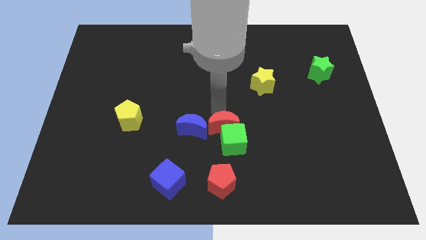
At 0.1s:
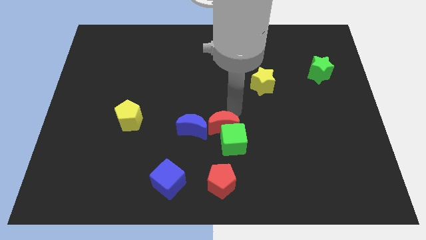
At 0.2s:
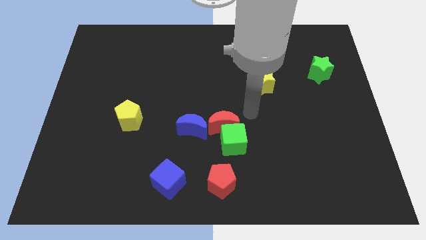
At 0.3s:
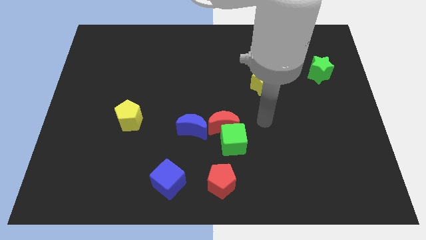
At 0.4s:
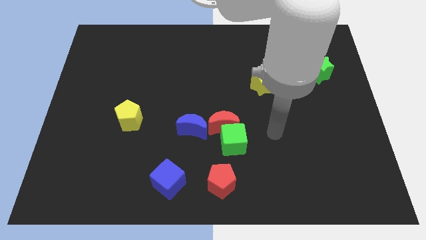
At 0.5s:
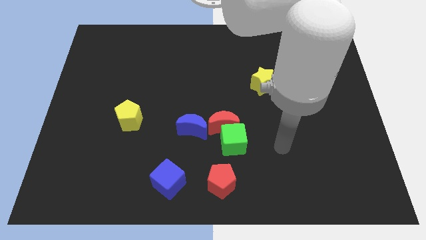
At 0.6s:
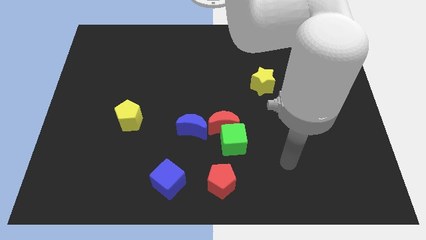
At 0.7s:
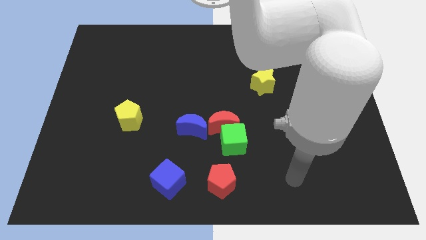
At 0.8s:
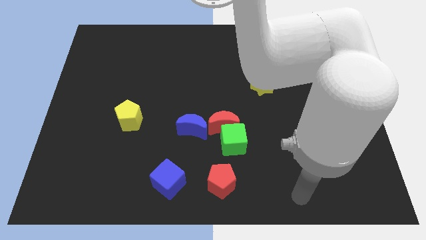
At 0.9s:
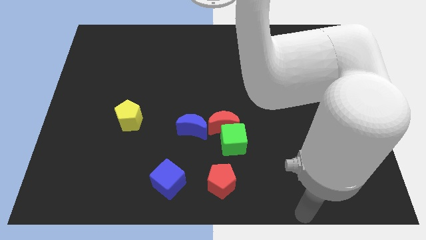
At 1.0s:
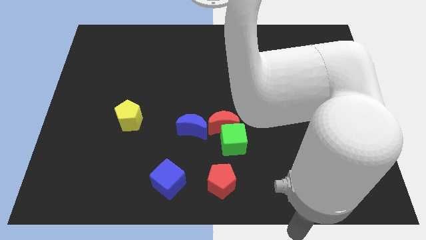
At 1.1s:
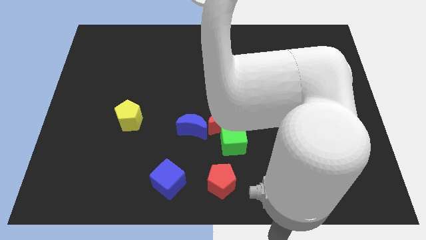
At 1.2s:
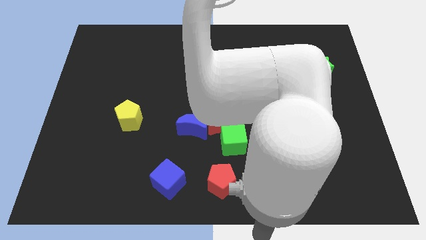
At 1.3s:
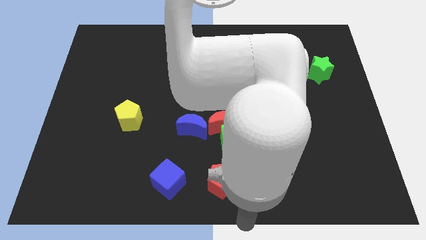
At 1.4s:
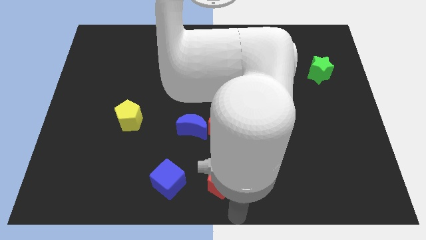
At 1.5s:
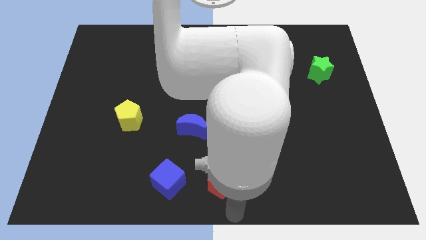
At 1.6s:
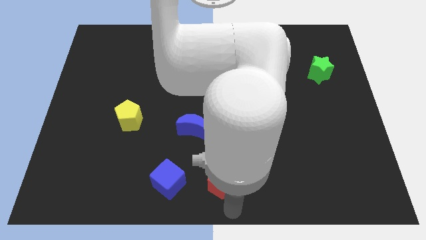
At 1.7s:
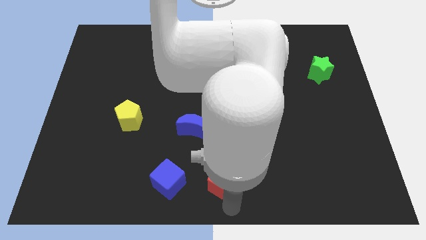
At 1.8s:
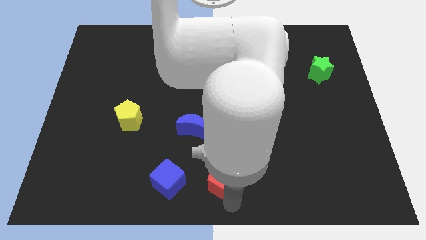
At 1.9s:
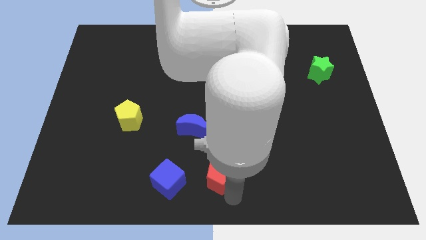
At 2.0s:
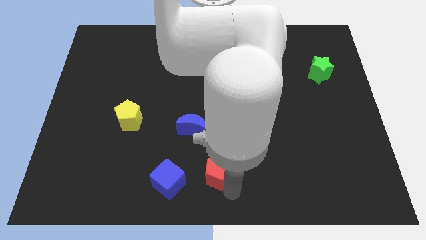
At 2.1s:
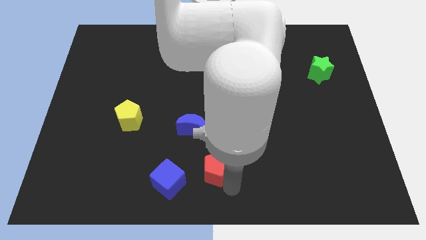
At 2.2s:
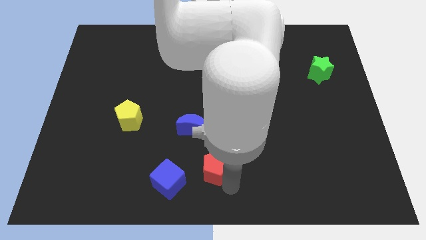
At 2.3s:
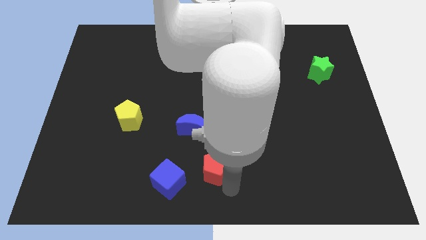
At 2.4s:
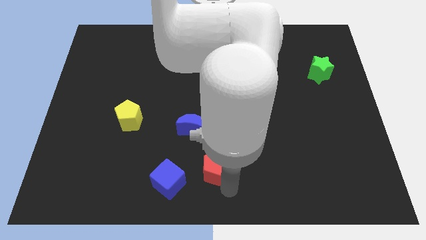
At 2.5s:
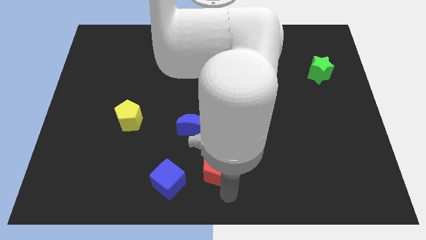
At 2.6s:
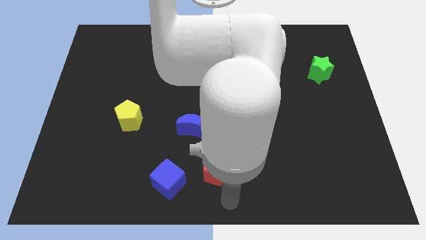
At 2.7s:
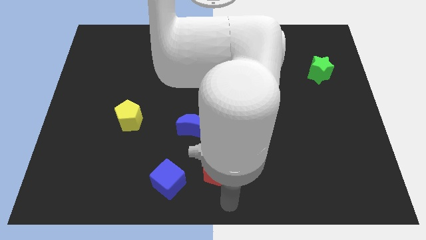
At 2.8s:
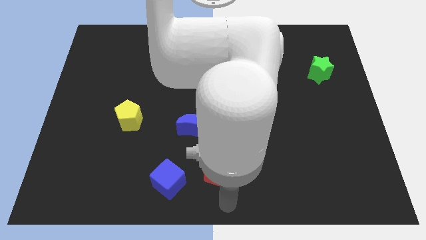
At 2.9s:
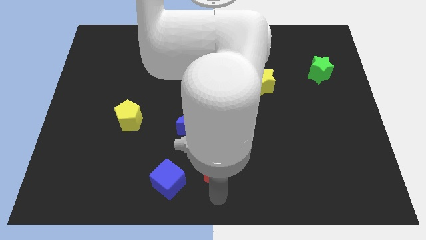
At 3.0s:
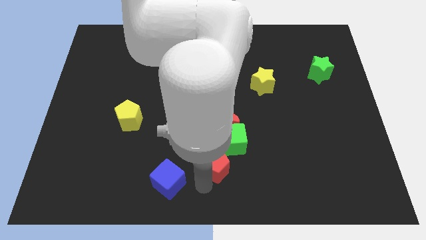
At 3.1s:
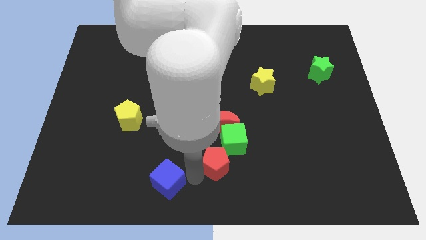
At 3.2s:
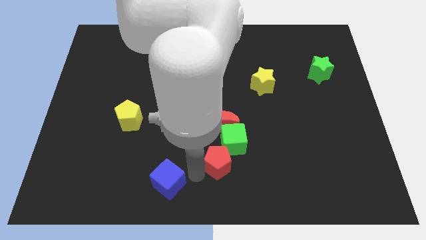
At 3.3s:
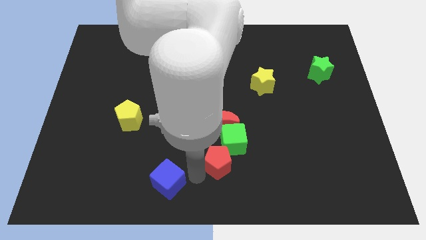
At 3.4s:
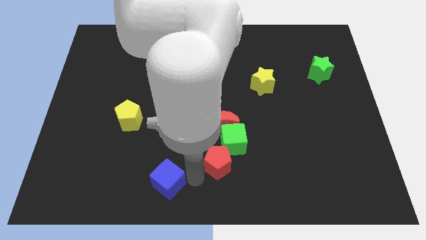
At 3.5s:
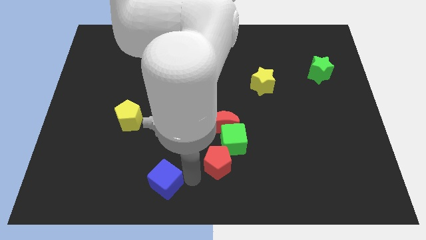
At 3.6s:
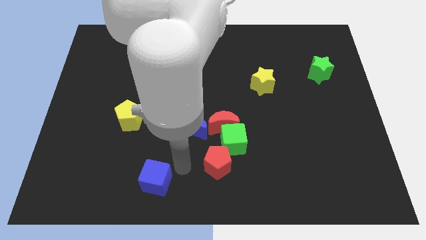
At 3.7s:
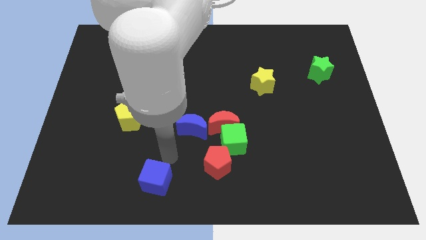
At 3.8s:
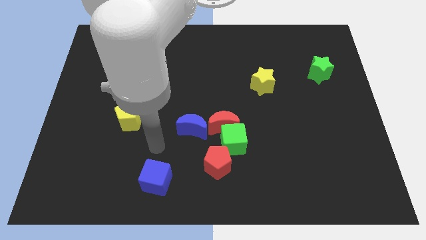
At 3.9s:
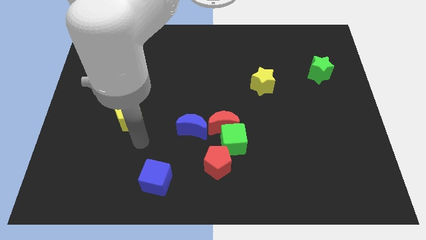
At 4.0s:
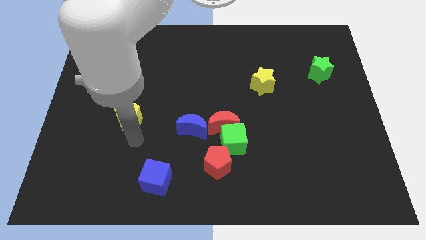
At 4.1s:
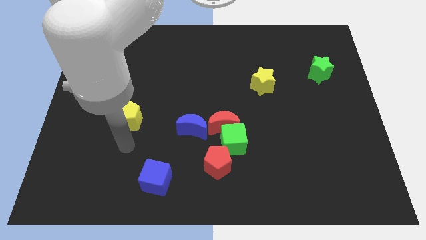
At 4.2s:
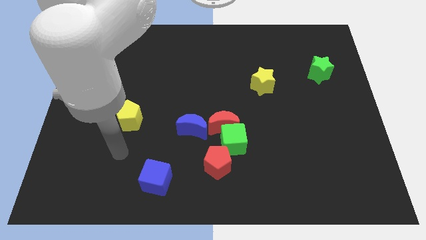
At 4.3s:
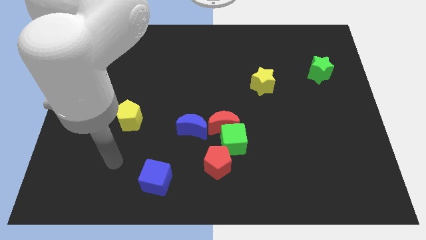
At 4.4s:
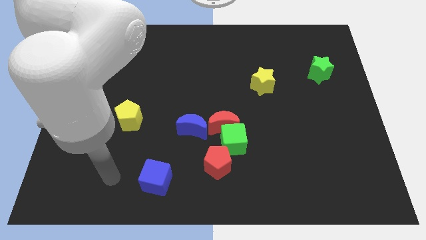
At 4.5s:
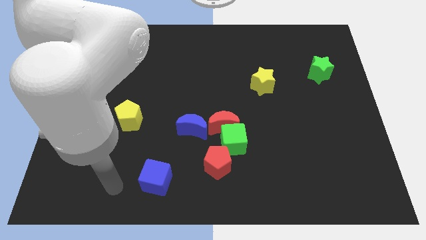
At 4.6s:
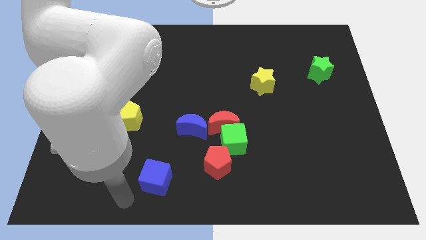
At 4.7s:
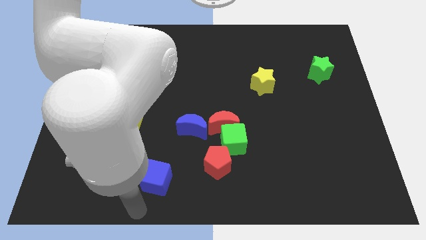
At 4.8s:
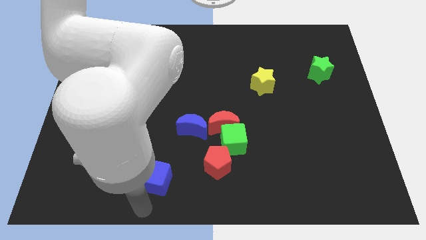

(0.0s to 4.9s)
move the red pentagon slightly up

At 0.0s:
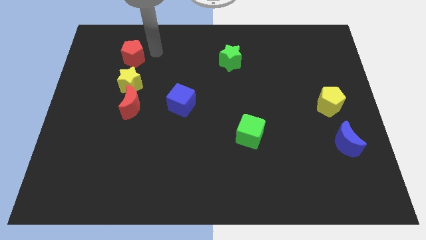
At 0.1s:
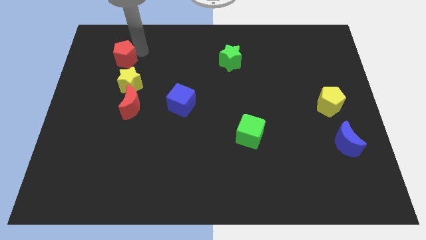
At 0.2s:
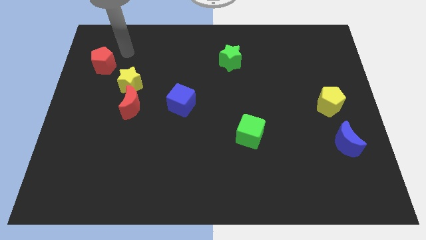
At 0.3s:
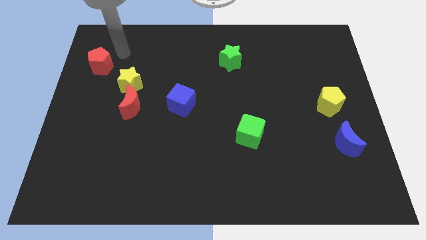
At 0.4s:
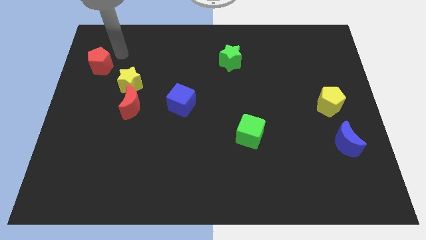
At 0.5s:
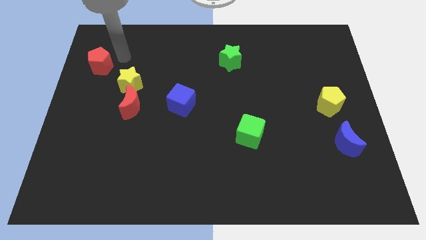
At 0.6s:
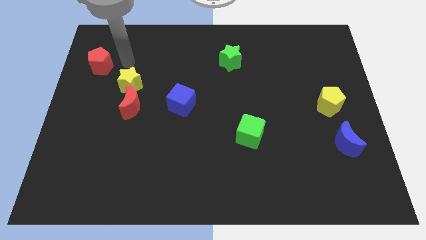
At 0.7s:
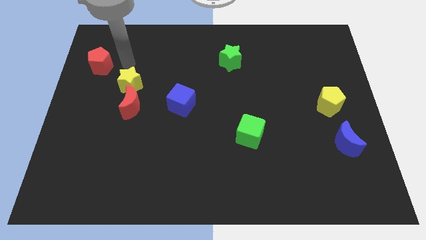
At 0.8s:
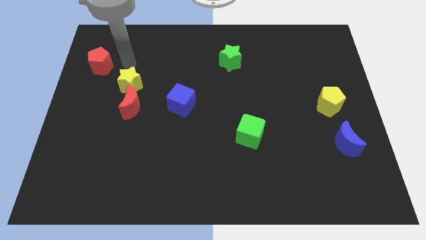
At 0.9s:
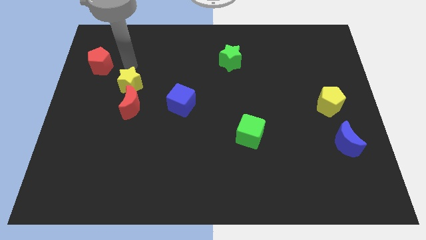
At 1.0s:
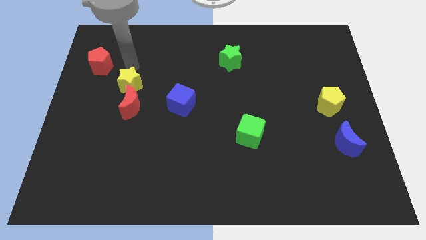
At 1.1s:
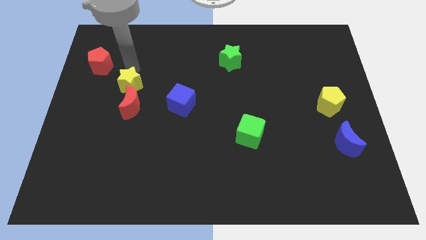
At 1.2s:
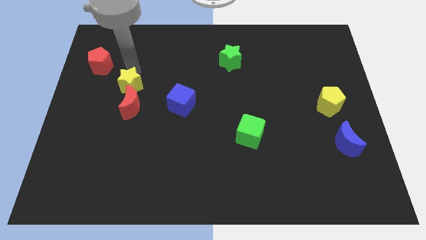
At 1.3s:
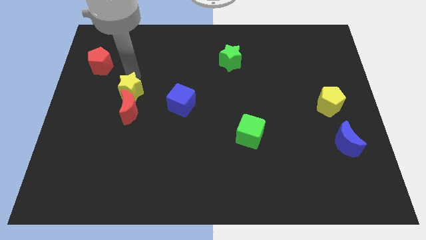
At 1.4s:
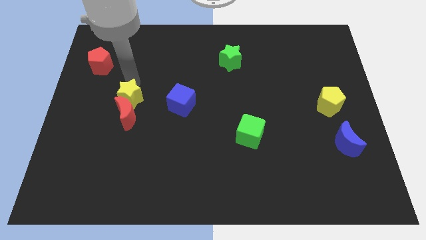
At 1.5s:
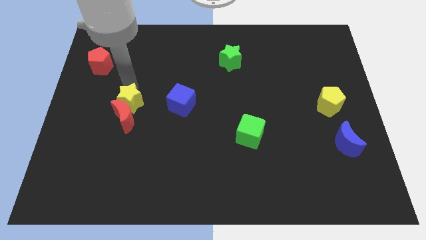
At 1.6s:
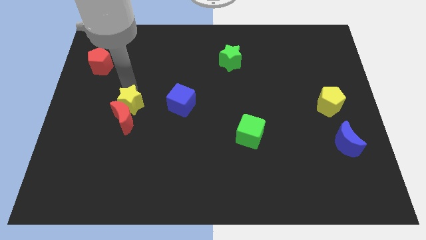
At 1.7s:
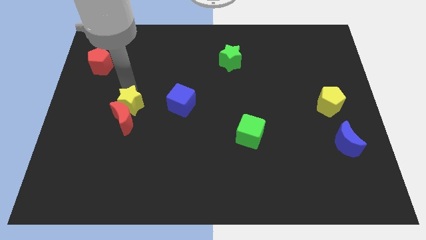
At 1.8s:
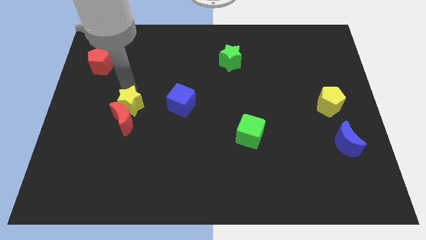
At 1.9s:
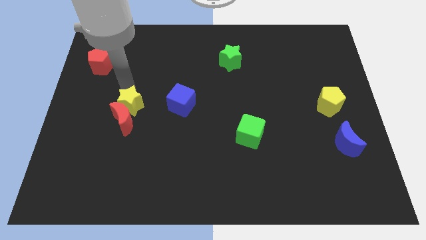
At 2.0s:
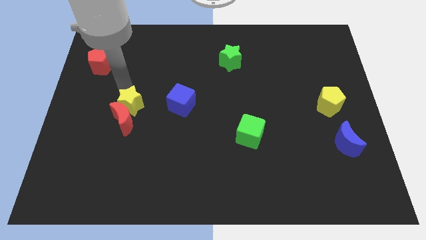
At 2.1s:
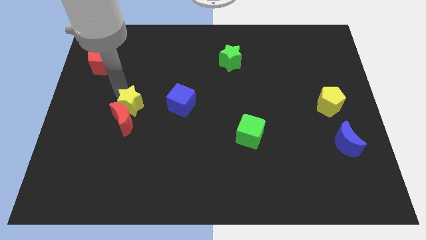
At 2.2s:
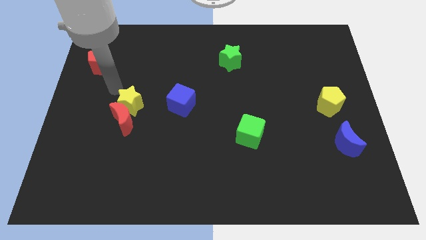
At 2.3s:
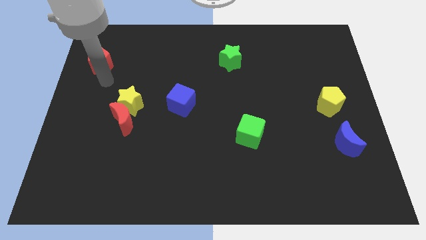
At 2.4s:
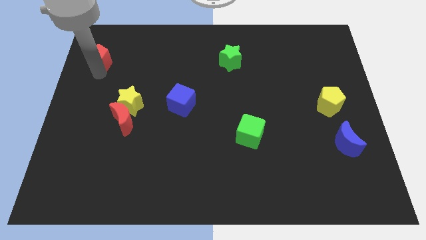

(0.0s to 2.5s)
push the green star into the red crescent

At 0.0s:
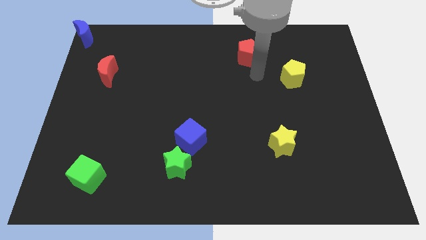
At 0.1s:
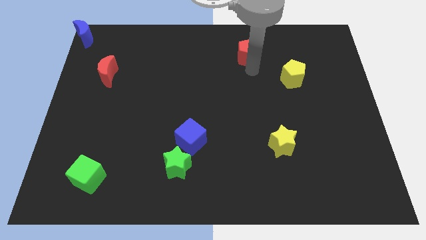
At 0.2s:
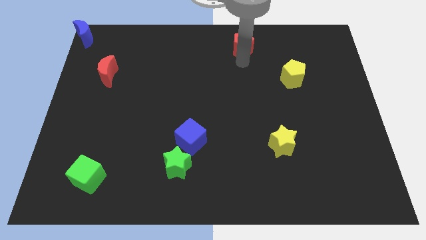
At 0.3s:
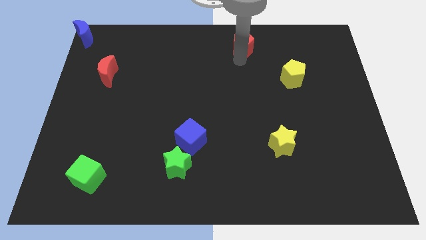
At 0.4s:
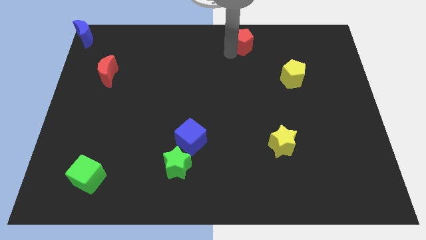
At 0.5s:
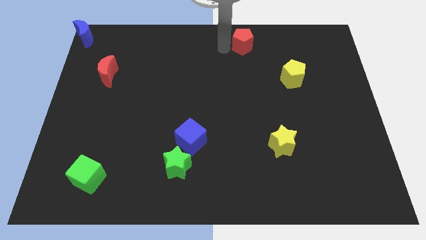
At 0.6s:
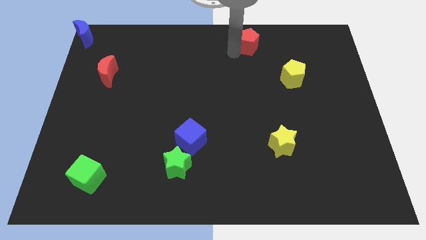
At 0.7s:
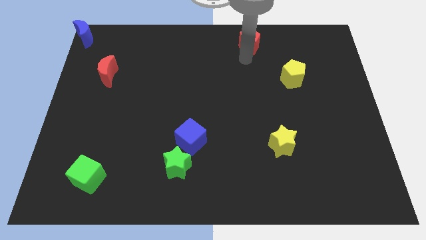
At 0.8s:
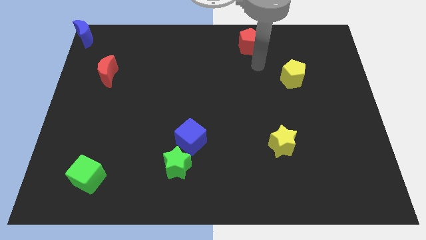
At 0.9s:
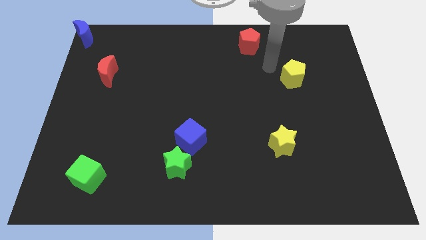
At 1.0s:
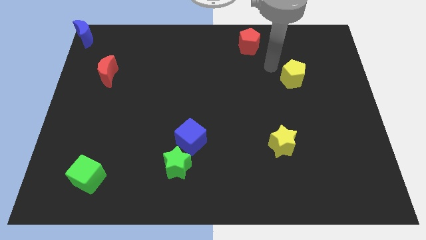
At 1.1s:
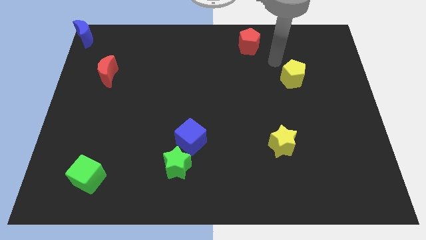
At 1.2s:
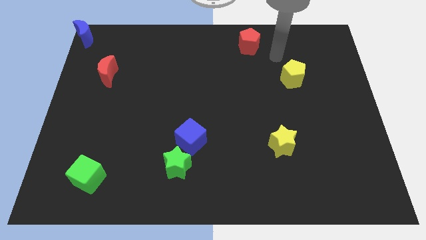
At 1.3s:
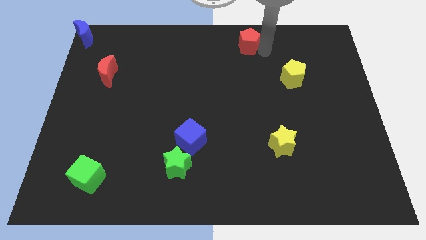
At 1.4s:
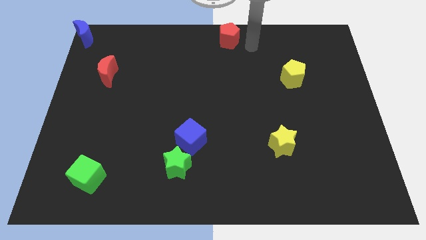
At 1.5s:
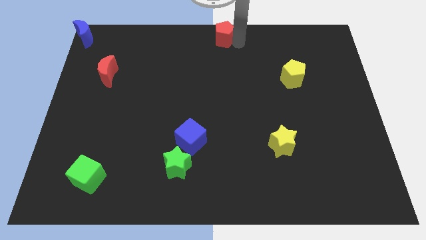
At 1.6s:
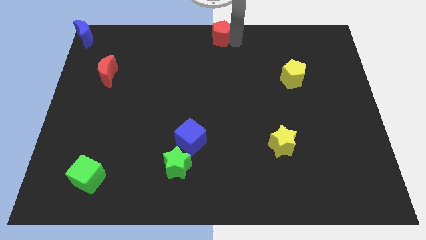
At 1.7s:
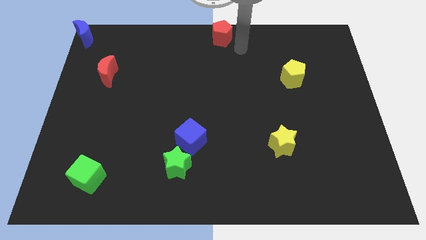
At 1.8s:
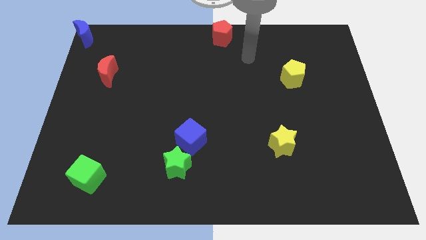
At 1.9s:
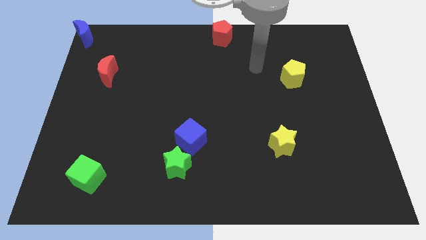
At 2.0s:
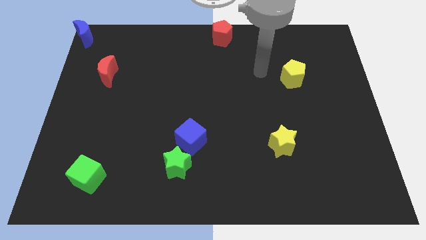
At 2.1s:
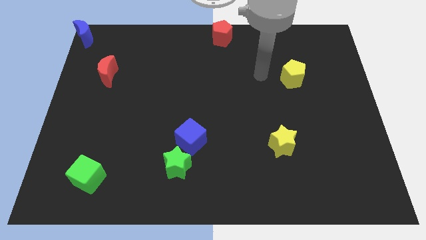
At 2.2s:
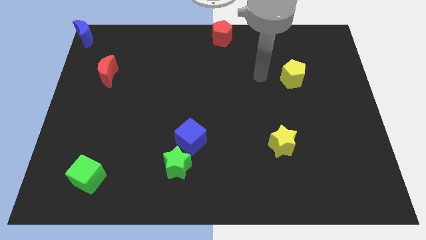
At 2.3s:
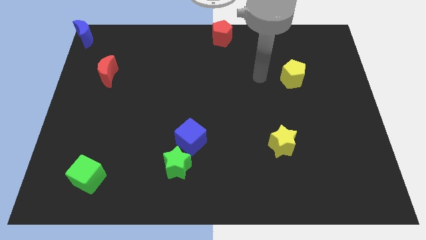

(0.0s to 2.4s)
place the red pentagon to the top side center
